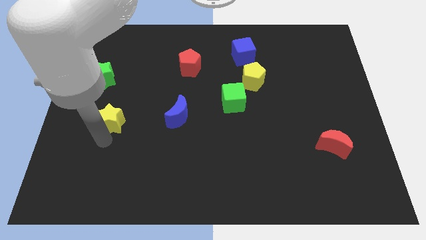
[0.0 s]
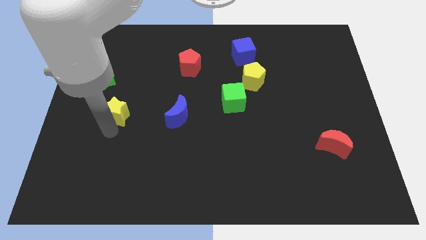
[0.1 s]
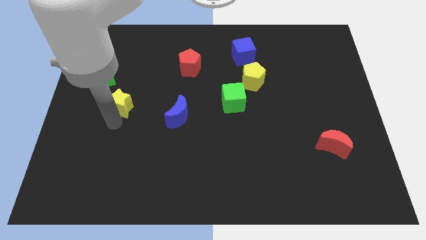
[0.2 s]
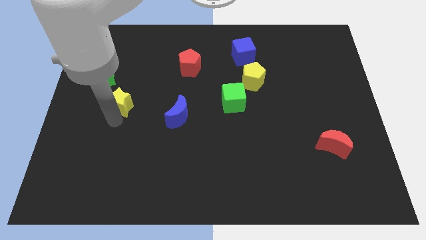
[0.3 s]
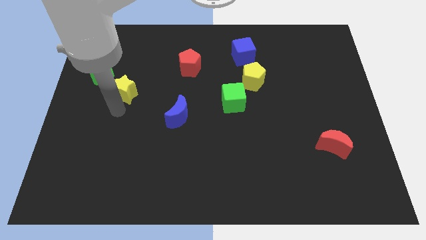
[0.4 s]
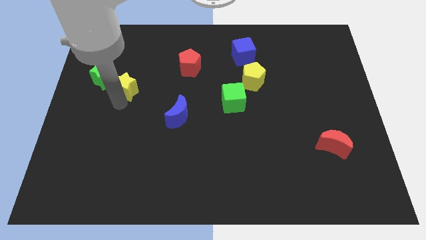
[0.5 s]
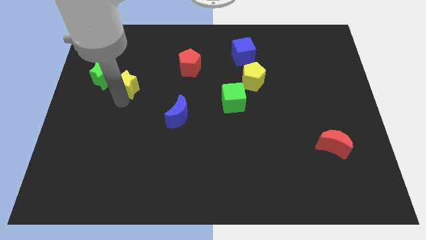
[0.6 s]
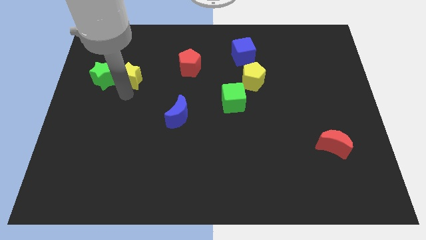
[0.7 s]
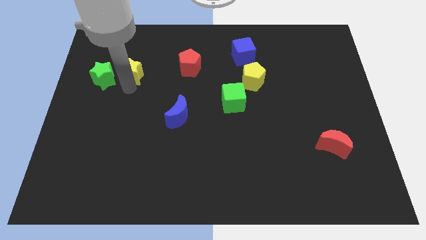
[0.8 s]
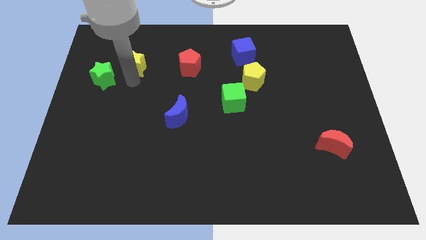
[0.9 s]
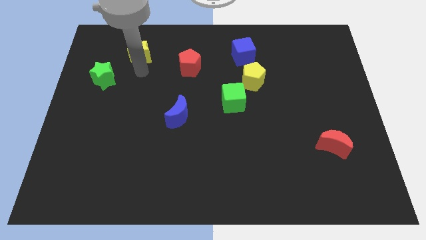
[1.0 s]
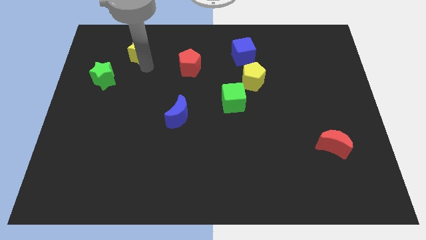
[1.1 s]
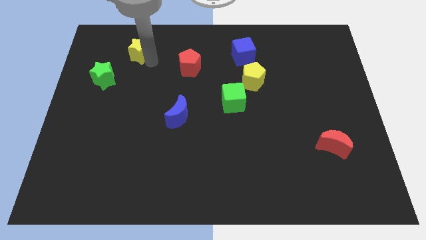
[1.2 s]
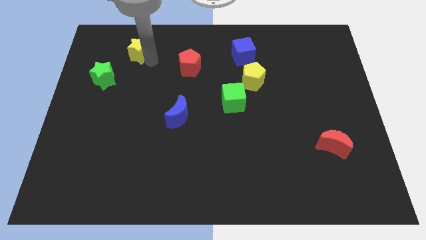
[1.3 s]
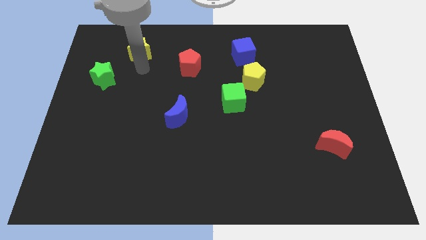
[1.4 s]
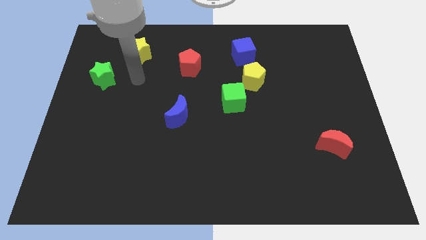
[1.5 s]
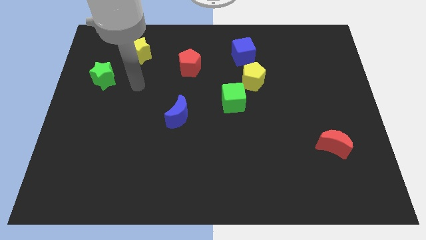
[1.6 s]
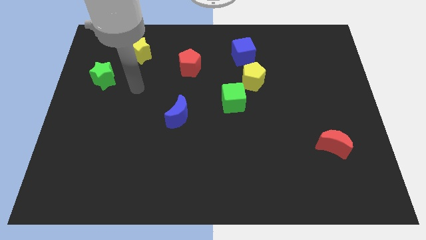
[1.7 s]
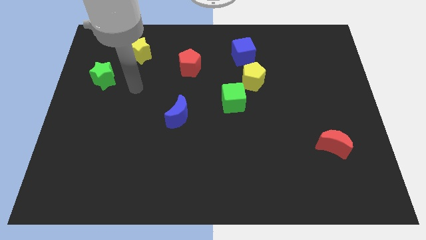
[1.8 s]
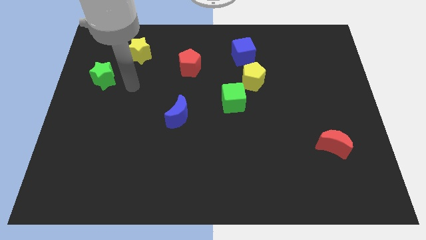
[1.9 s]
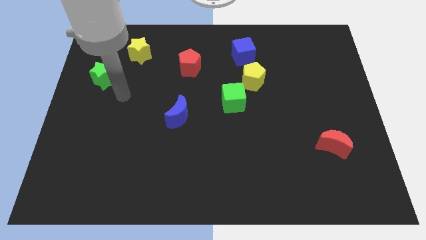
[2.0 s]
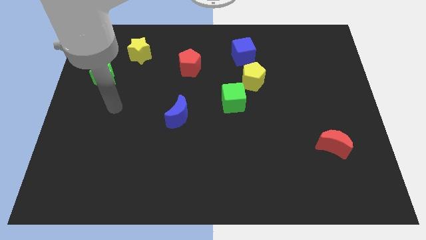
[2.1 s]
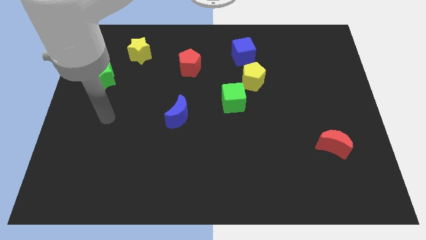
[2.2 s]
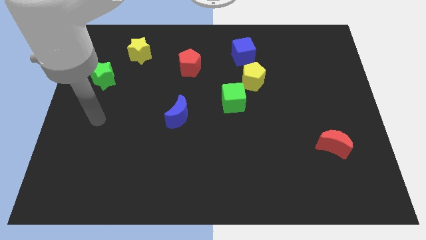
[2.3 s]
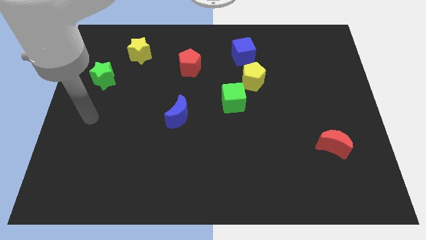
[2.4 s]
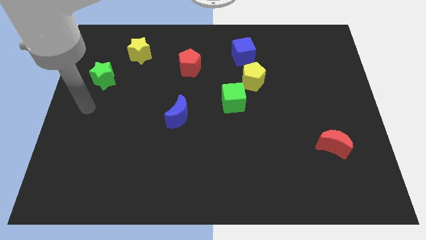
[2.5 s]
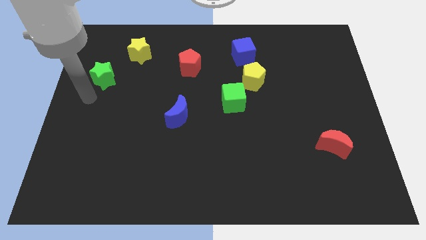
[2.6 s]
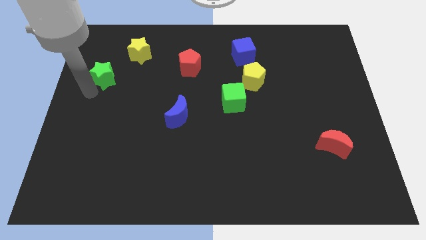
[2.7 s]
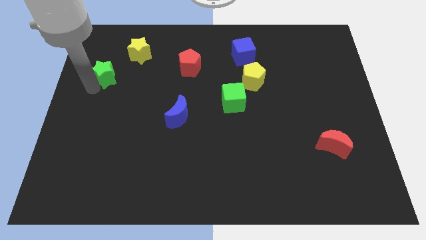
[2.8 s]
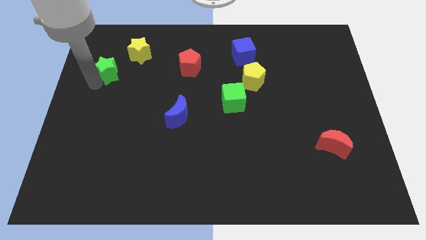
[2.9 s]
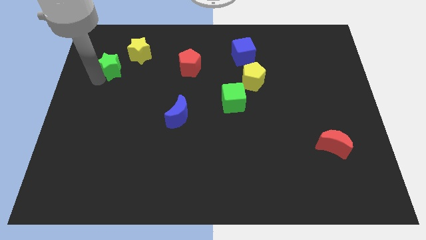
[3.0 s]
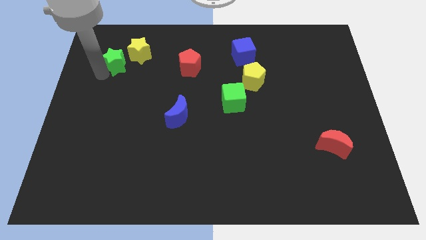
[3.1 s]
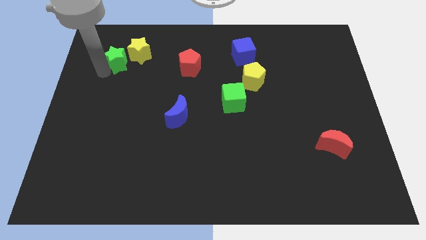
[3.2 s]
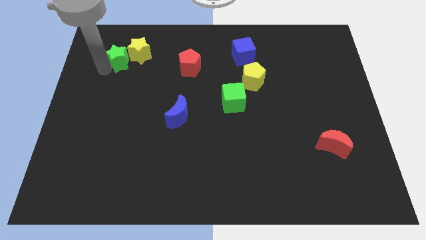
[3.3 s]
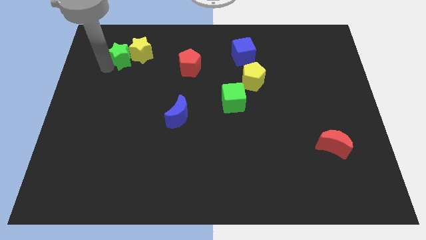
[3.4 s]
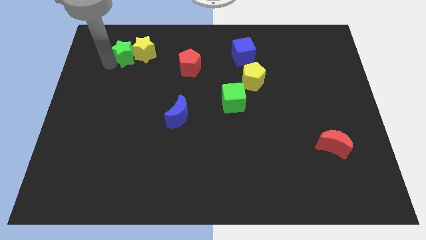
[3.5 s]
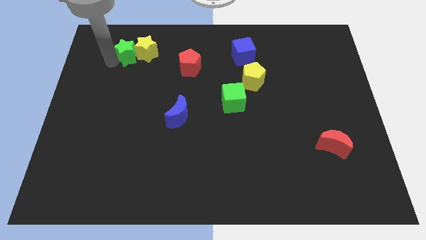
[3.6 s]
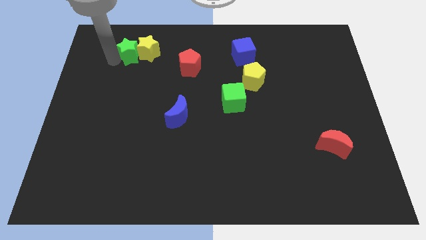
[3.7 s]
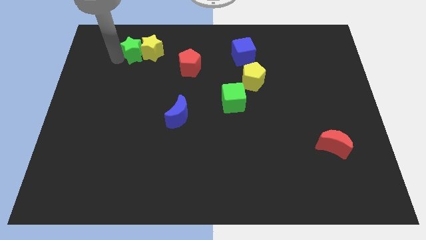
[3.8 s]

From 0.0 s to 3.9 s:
push the green and yellow stars to the top of the board

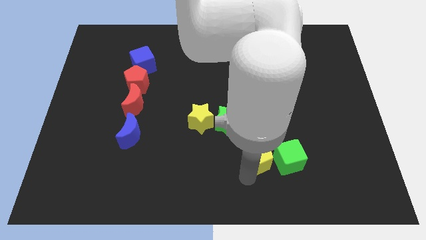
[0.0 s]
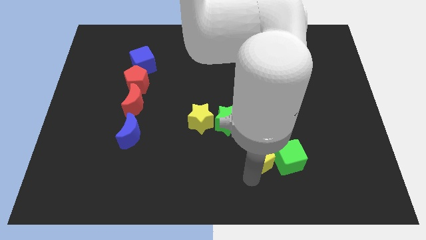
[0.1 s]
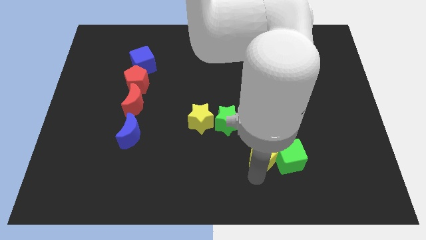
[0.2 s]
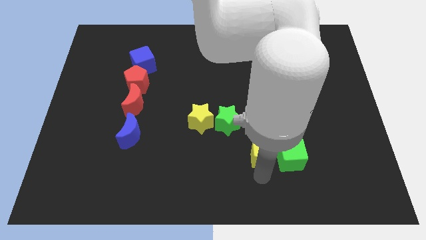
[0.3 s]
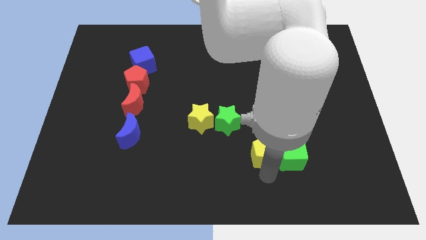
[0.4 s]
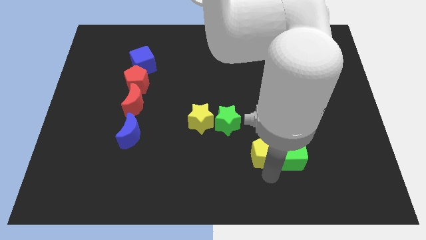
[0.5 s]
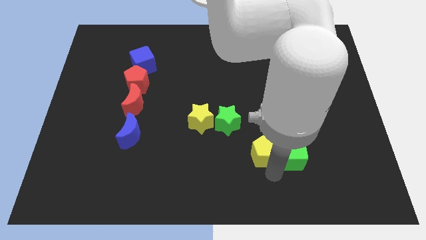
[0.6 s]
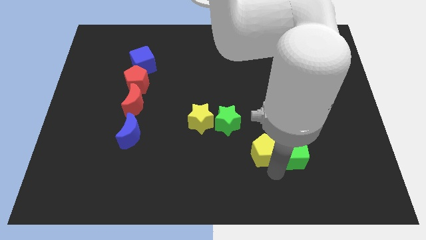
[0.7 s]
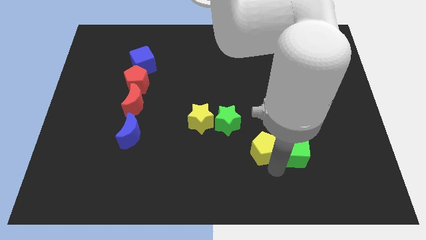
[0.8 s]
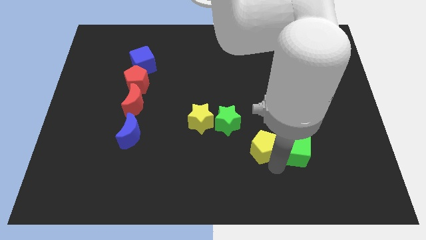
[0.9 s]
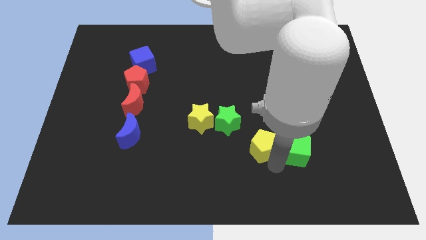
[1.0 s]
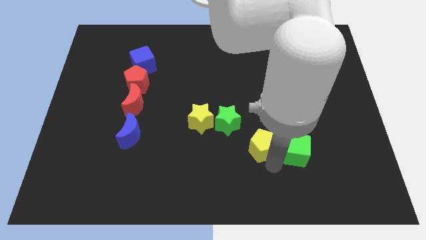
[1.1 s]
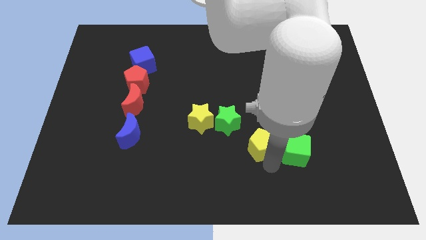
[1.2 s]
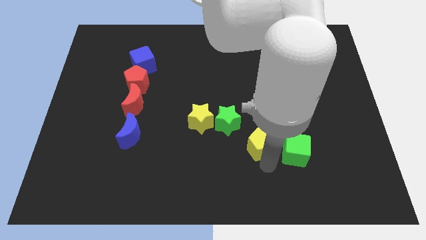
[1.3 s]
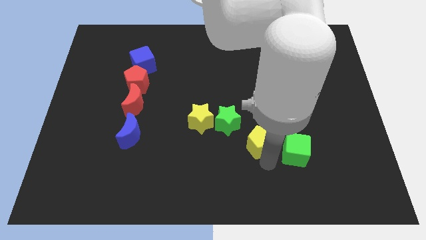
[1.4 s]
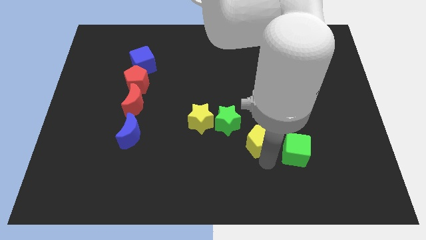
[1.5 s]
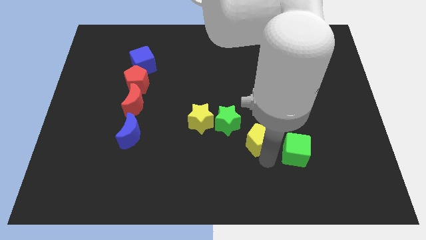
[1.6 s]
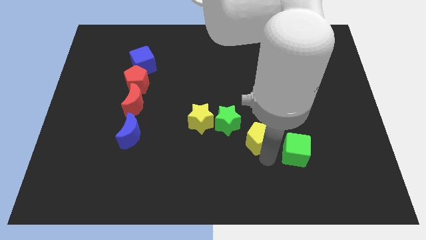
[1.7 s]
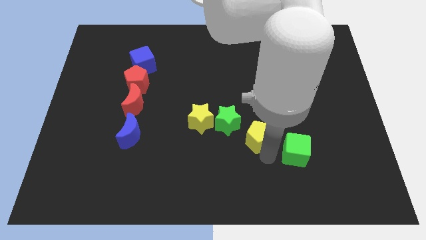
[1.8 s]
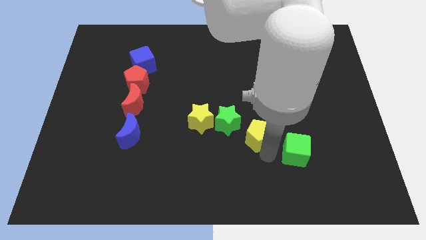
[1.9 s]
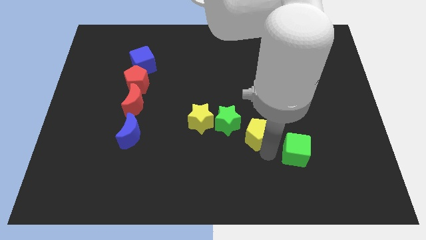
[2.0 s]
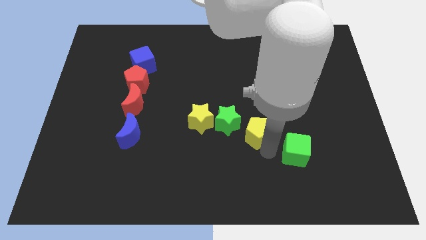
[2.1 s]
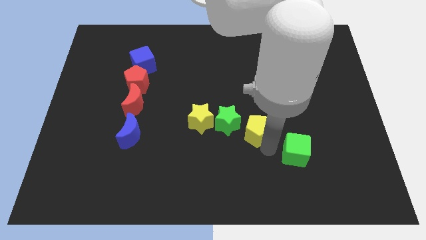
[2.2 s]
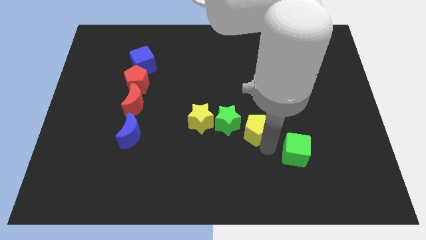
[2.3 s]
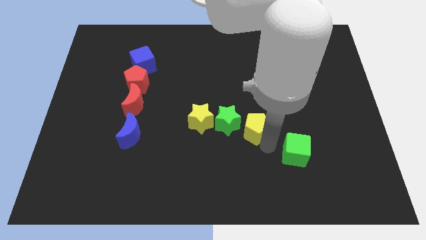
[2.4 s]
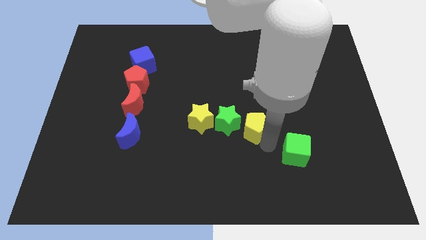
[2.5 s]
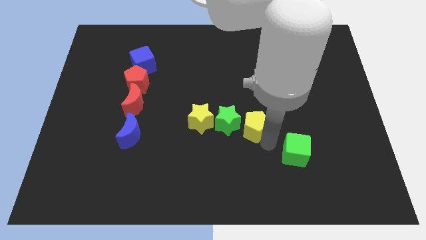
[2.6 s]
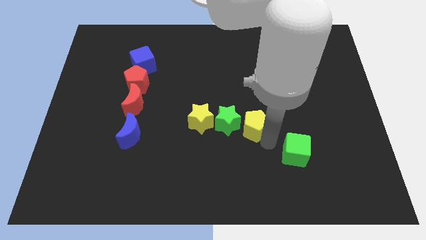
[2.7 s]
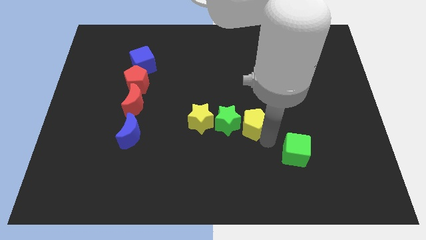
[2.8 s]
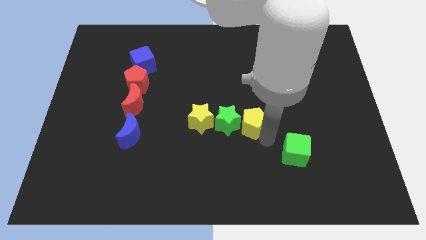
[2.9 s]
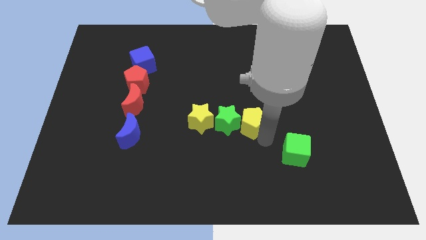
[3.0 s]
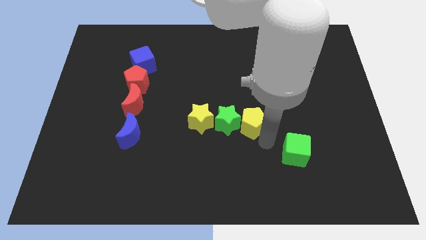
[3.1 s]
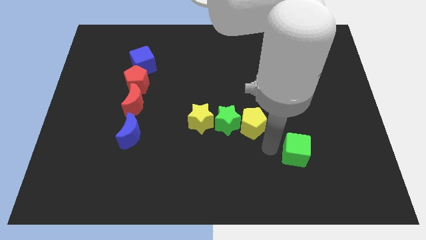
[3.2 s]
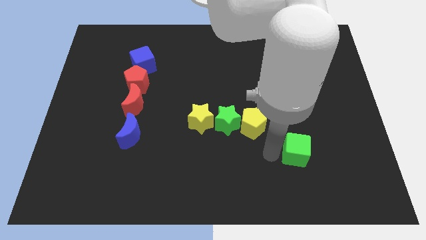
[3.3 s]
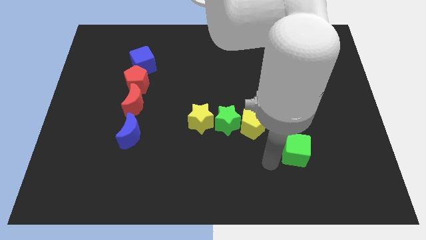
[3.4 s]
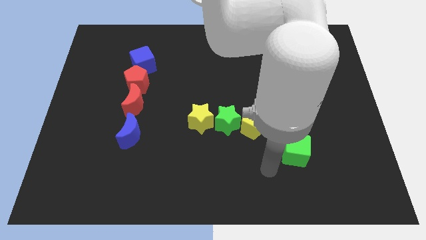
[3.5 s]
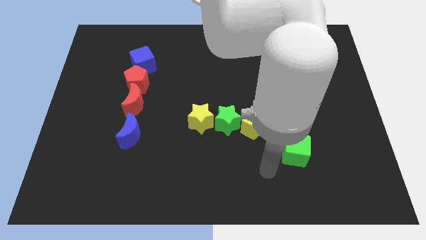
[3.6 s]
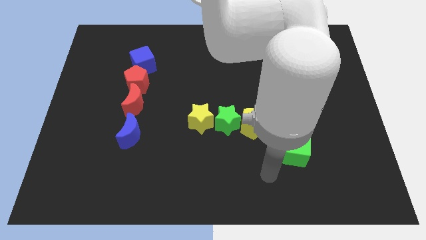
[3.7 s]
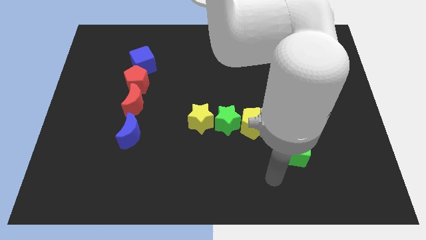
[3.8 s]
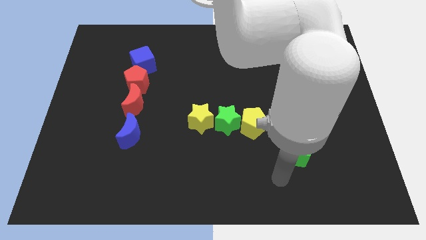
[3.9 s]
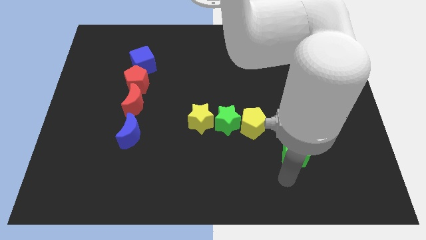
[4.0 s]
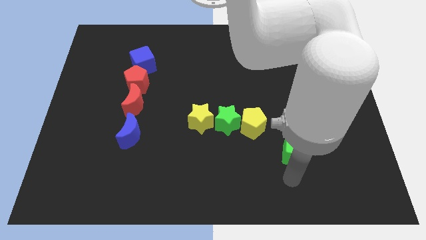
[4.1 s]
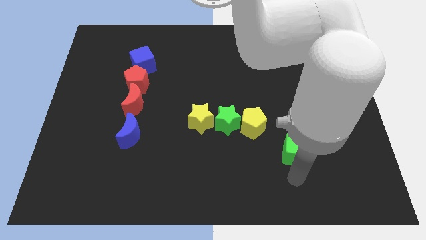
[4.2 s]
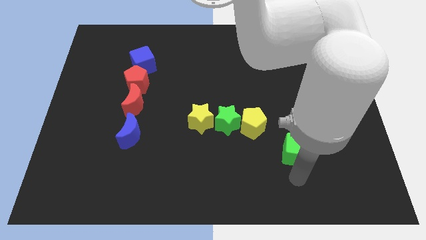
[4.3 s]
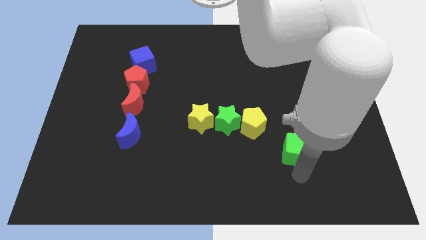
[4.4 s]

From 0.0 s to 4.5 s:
move the yellow pentagon right beside the green star

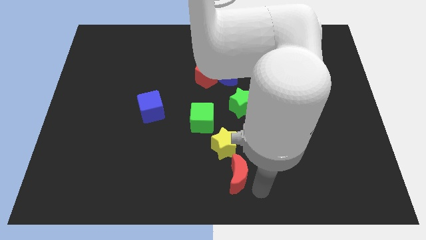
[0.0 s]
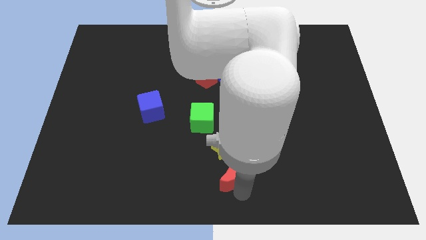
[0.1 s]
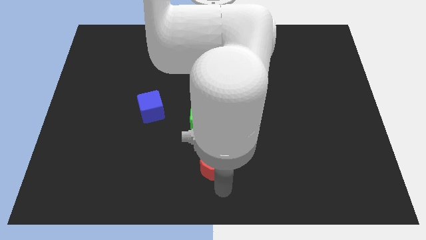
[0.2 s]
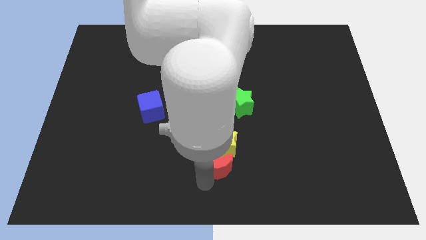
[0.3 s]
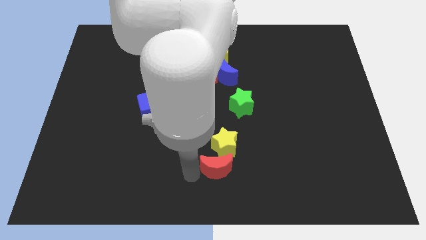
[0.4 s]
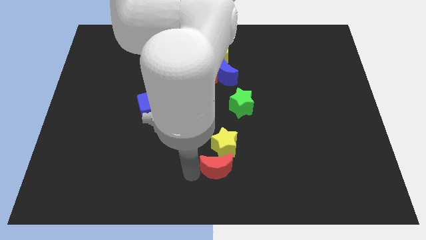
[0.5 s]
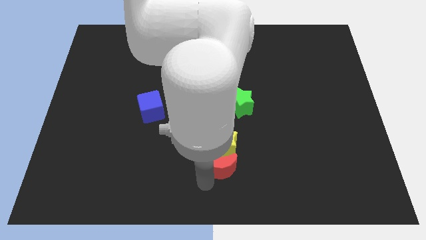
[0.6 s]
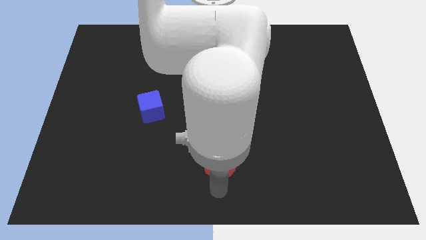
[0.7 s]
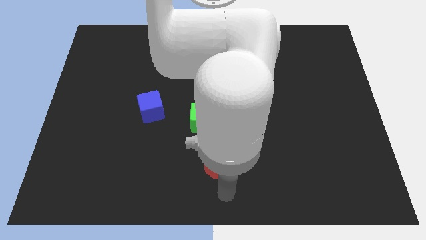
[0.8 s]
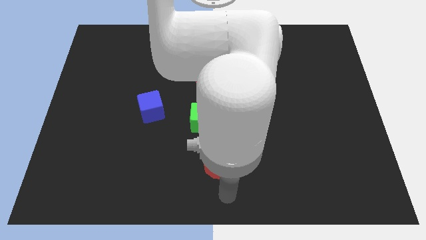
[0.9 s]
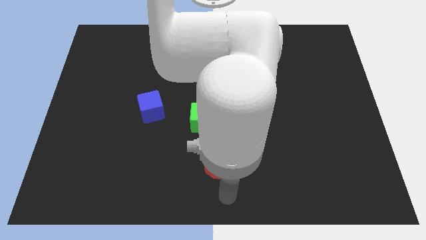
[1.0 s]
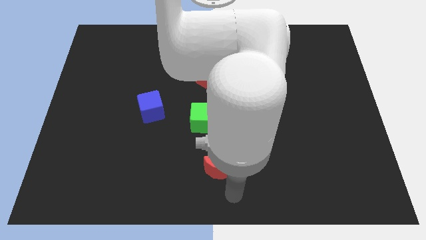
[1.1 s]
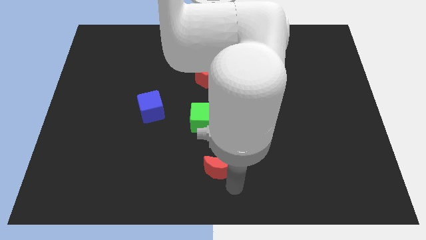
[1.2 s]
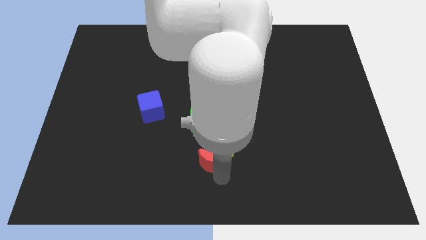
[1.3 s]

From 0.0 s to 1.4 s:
push red crescent into yellow star
